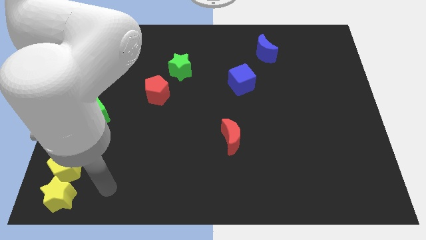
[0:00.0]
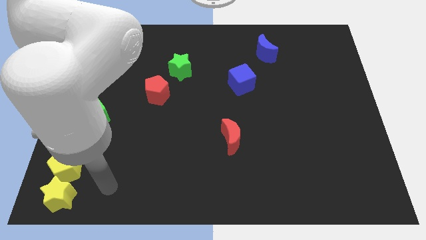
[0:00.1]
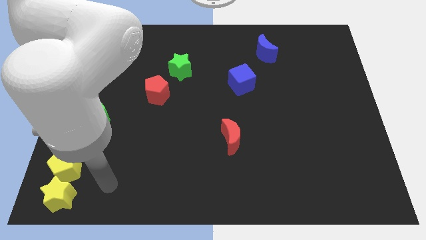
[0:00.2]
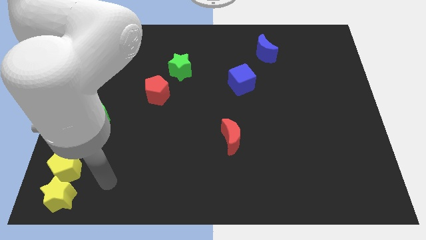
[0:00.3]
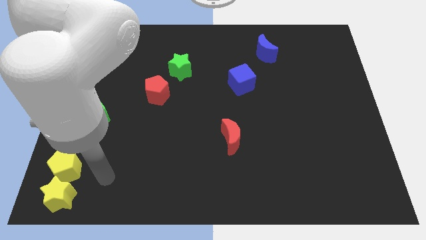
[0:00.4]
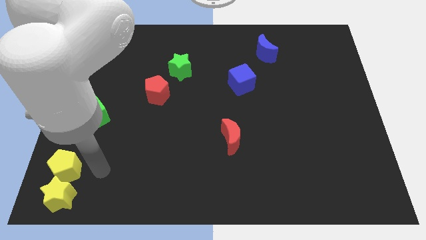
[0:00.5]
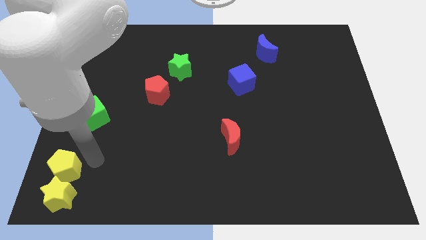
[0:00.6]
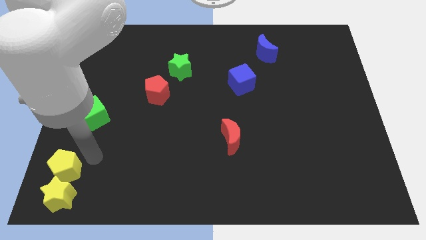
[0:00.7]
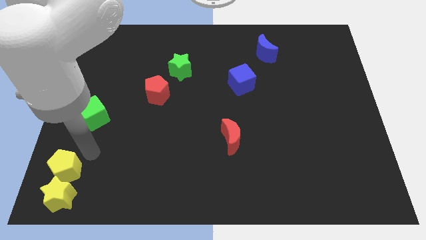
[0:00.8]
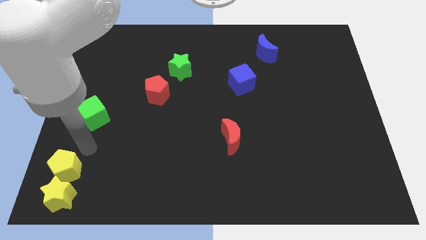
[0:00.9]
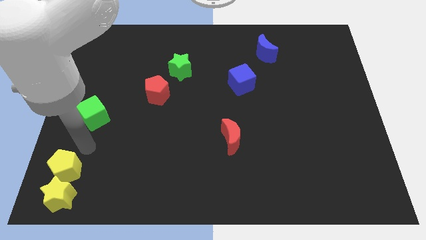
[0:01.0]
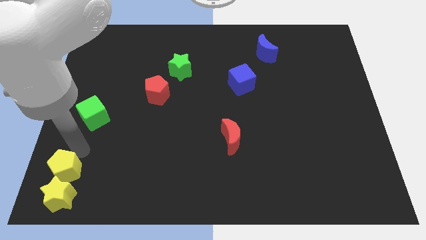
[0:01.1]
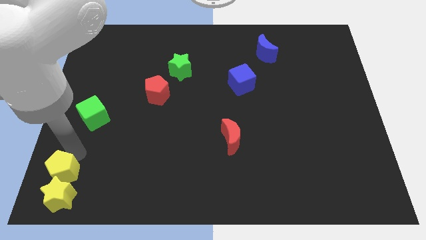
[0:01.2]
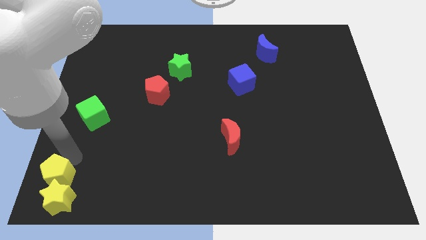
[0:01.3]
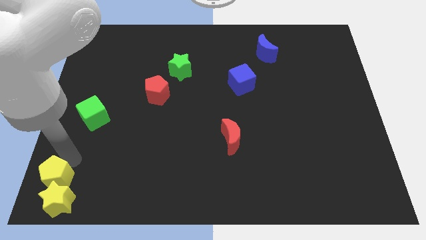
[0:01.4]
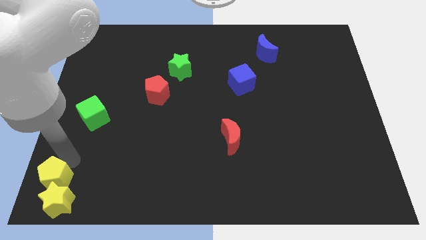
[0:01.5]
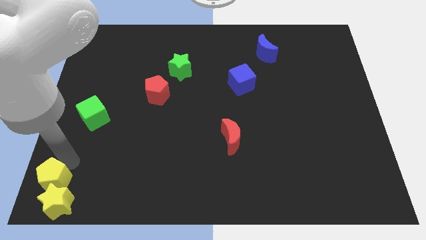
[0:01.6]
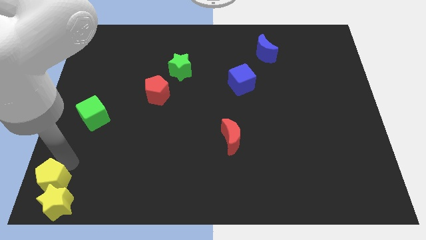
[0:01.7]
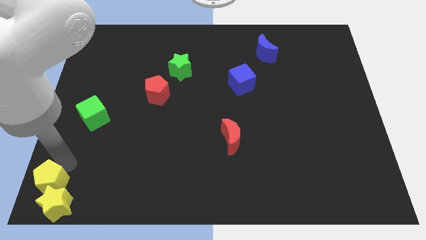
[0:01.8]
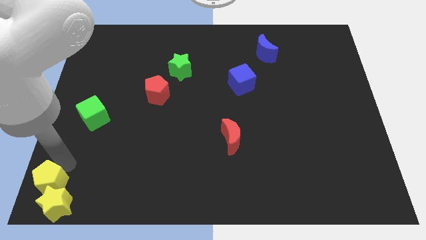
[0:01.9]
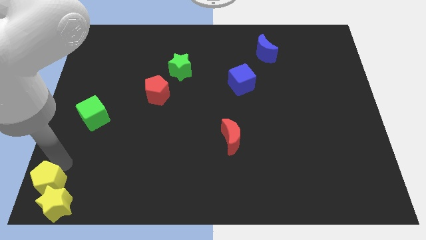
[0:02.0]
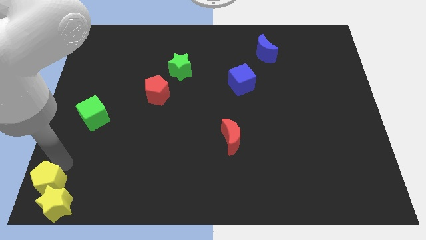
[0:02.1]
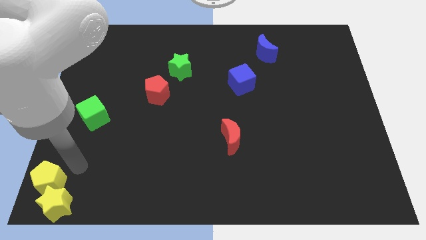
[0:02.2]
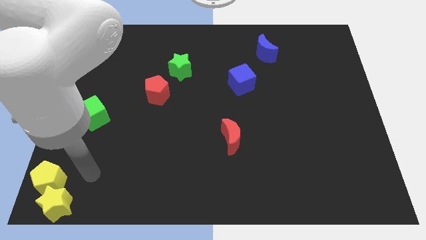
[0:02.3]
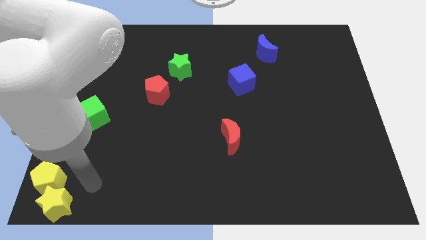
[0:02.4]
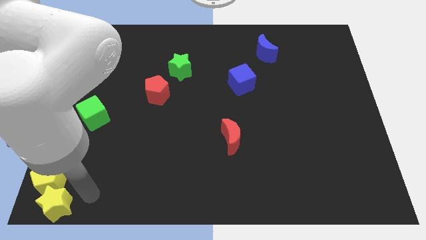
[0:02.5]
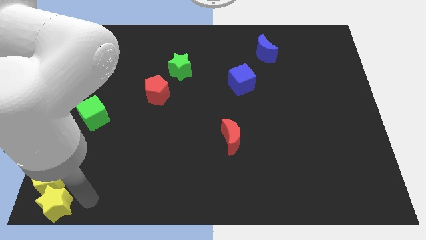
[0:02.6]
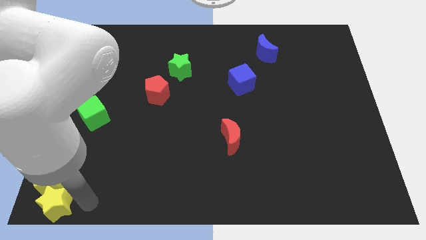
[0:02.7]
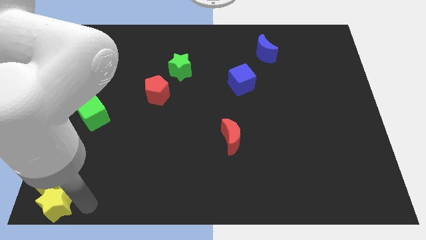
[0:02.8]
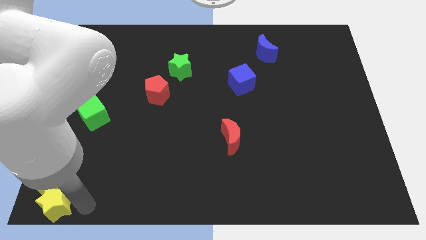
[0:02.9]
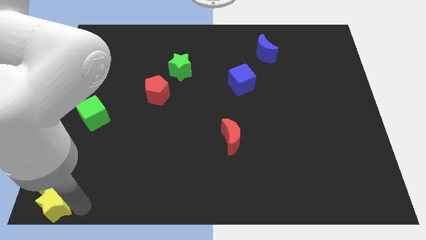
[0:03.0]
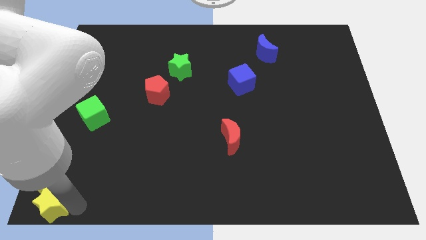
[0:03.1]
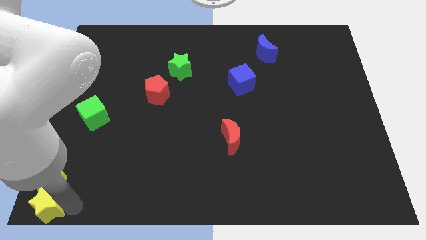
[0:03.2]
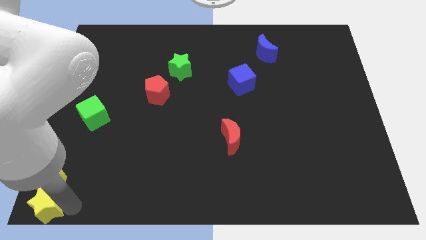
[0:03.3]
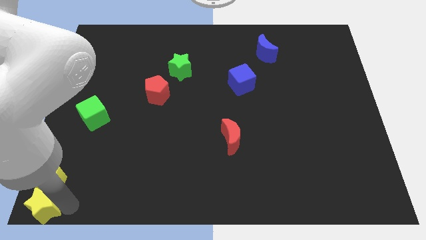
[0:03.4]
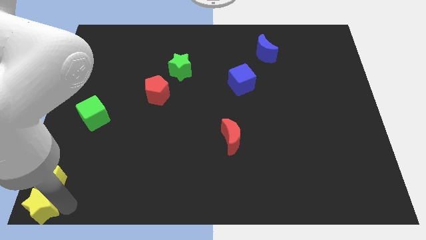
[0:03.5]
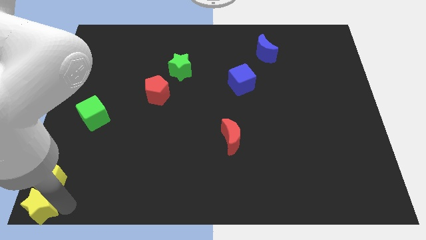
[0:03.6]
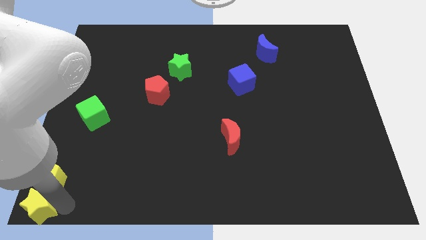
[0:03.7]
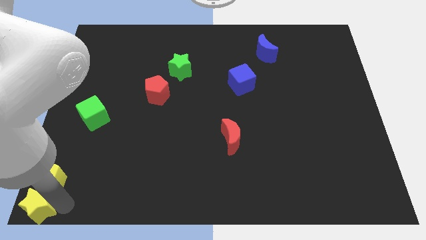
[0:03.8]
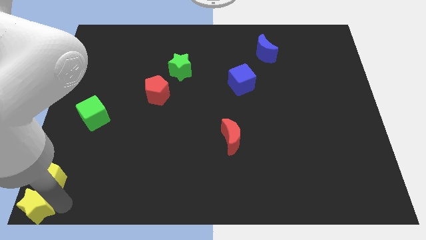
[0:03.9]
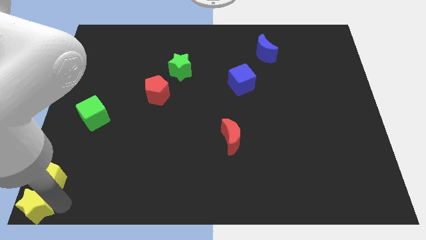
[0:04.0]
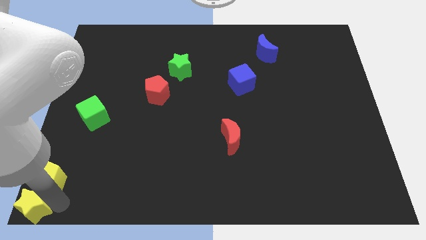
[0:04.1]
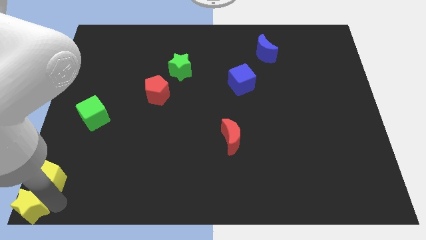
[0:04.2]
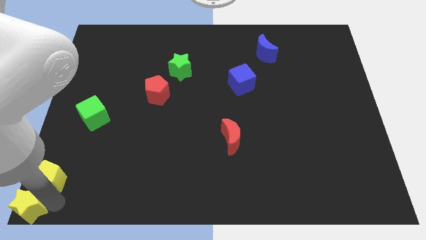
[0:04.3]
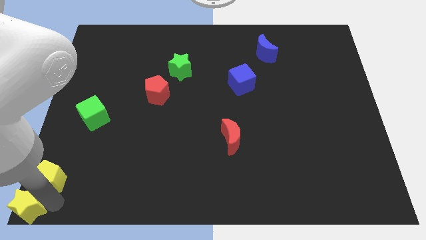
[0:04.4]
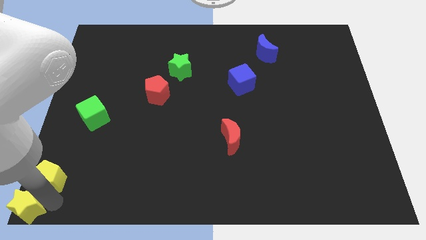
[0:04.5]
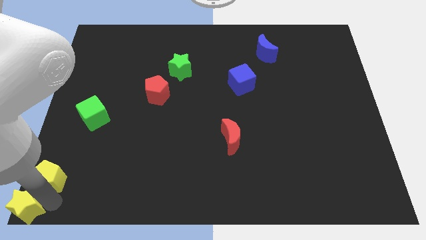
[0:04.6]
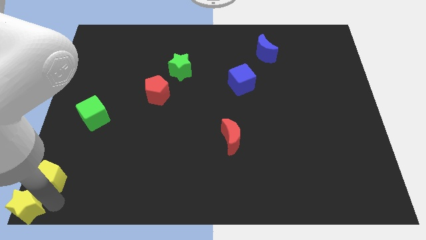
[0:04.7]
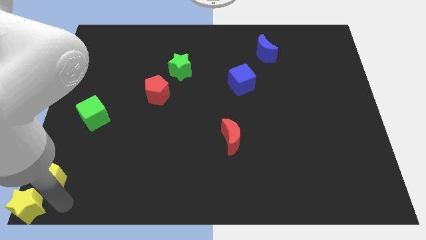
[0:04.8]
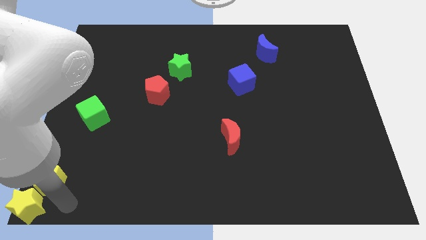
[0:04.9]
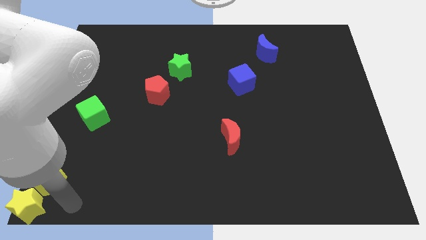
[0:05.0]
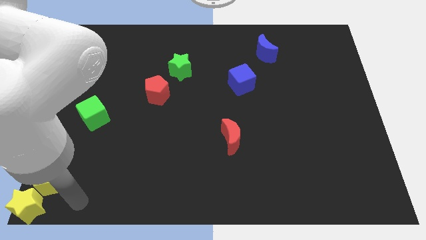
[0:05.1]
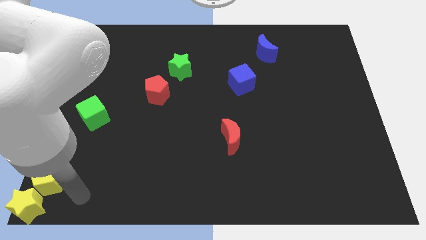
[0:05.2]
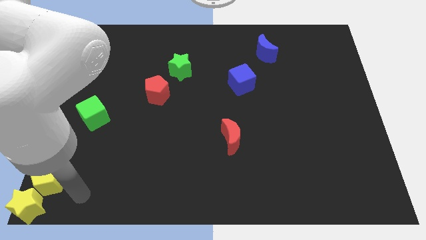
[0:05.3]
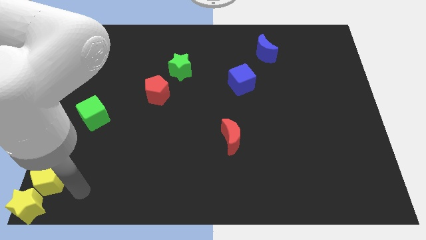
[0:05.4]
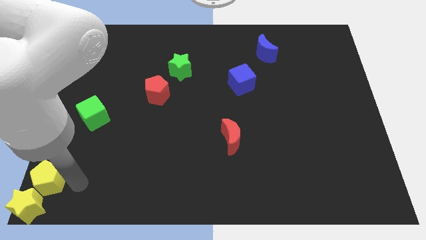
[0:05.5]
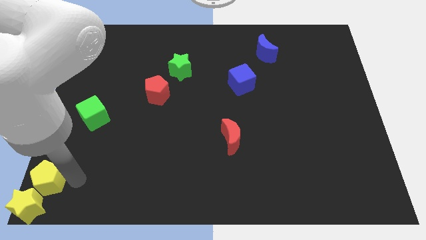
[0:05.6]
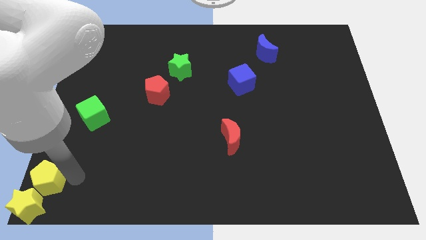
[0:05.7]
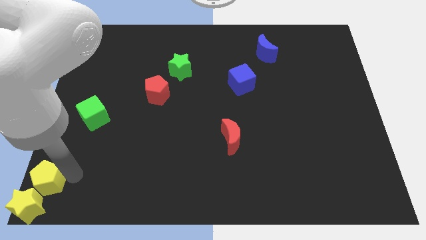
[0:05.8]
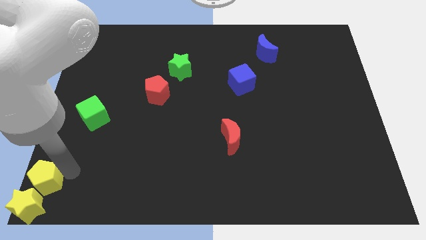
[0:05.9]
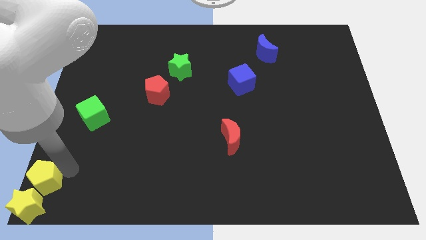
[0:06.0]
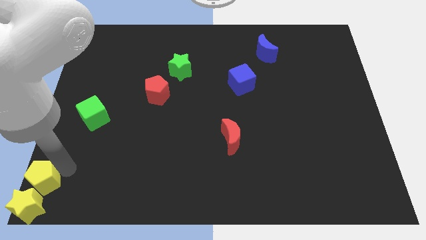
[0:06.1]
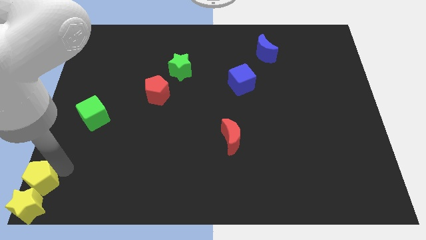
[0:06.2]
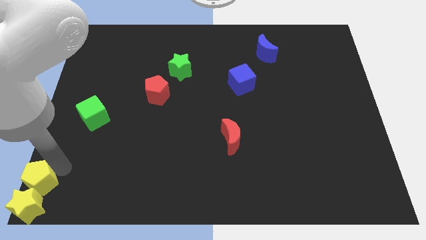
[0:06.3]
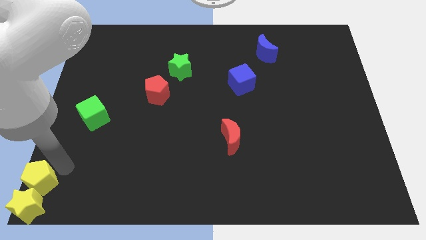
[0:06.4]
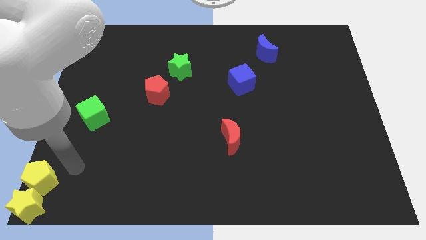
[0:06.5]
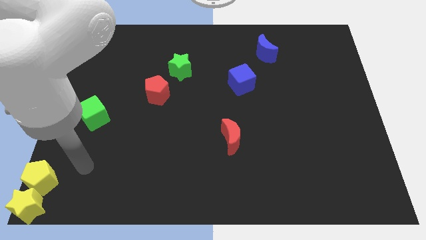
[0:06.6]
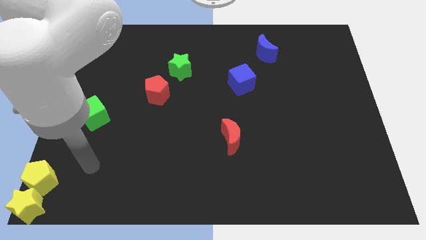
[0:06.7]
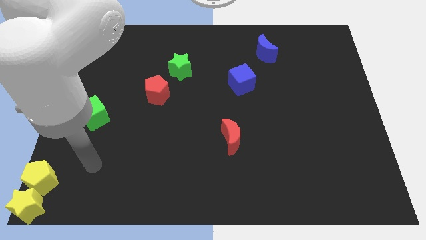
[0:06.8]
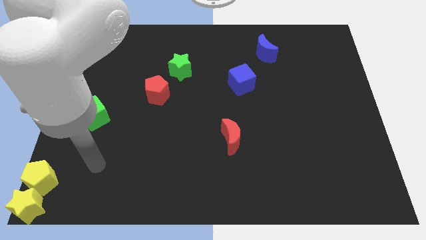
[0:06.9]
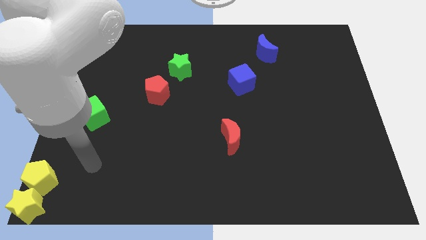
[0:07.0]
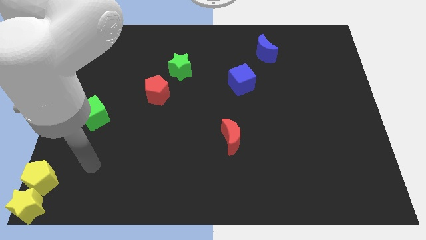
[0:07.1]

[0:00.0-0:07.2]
place the yellow blocks at the bottom left corner

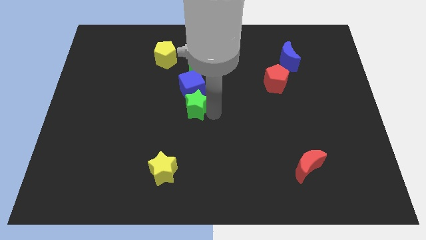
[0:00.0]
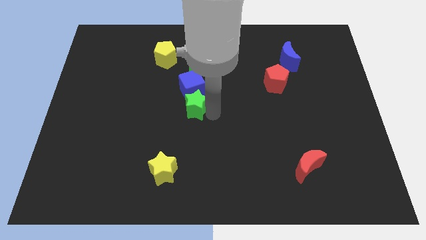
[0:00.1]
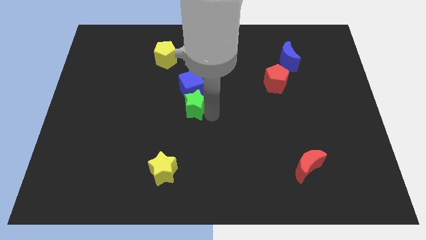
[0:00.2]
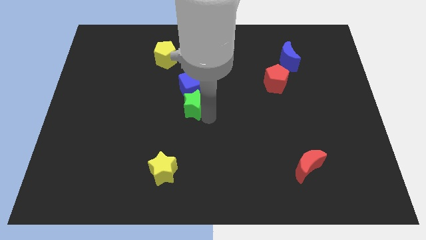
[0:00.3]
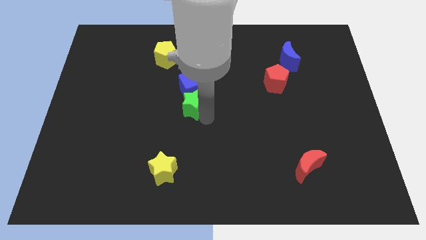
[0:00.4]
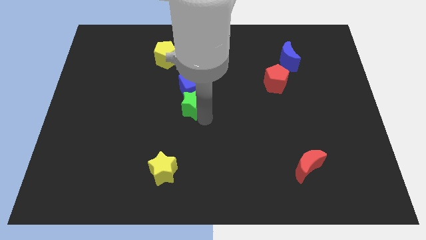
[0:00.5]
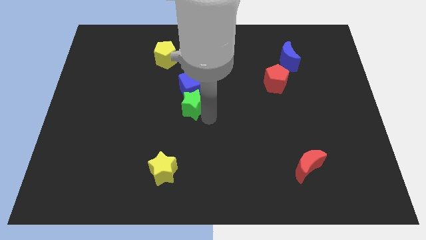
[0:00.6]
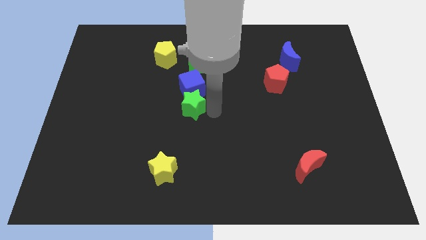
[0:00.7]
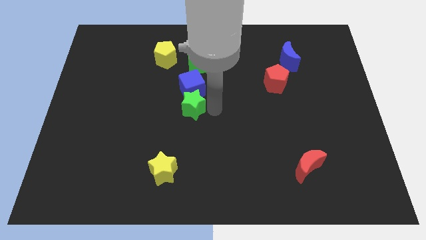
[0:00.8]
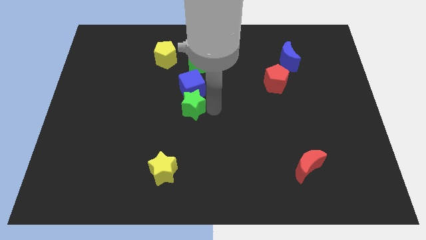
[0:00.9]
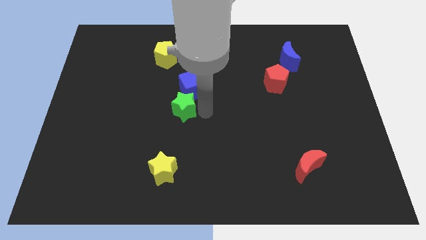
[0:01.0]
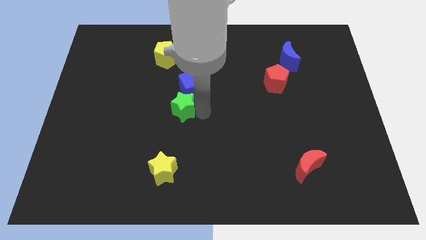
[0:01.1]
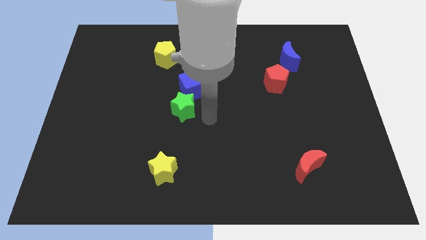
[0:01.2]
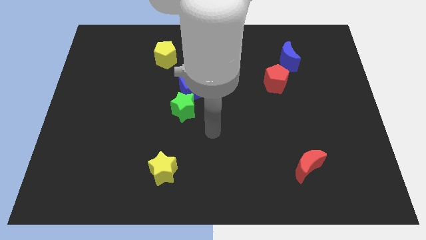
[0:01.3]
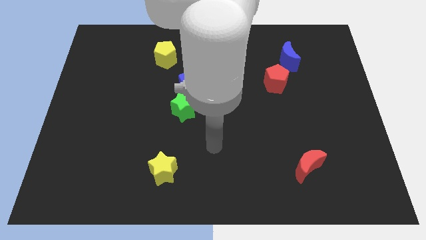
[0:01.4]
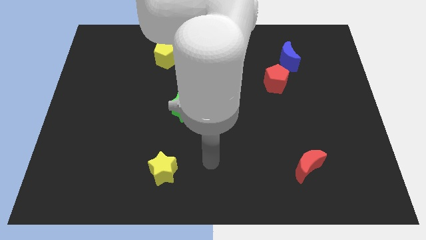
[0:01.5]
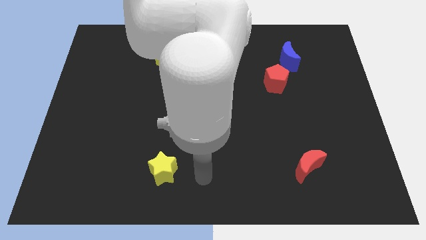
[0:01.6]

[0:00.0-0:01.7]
slightly push the green star to the left

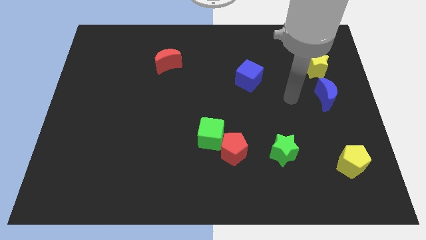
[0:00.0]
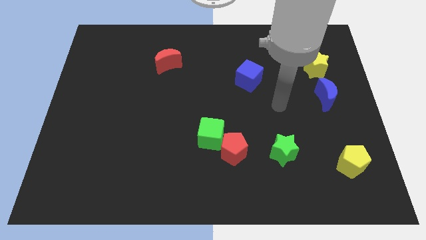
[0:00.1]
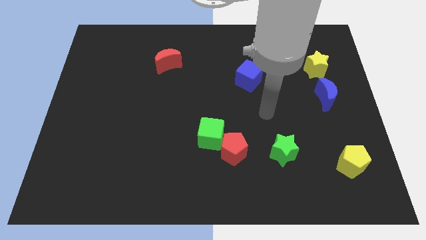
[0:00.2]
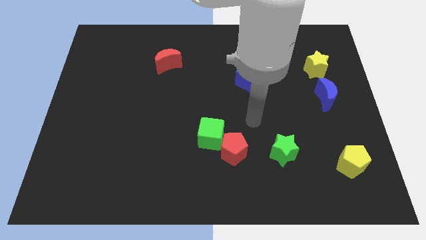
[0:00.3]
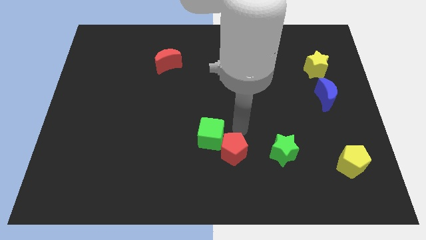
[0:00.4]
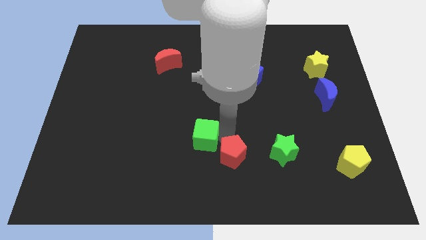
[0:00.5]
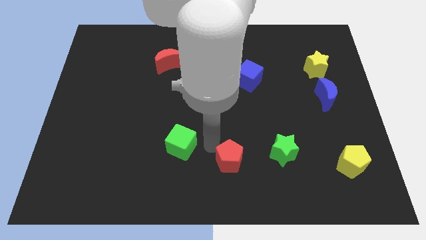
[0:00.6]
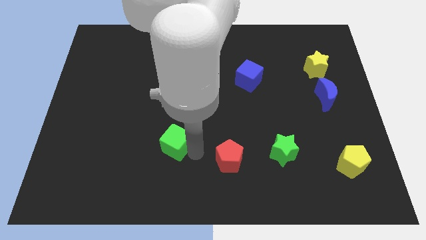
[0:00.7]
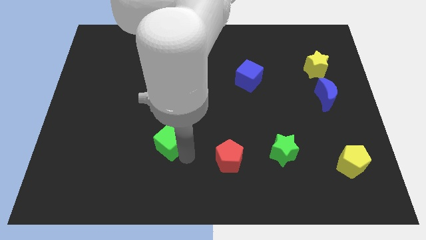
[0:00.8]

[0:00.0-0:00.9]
separate the green cube from red pentagon
